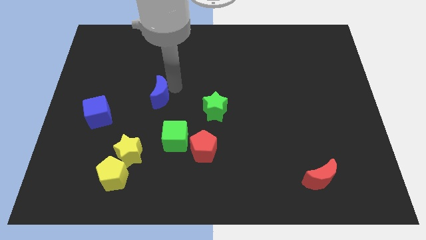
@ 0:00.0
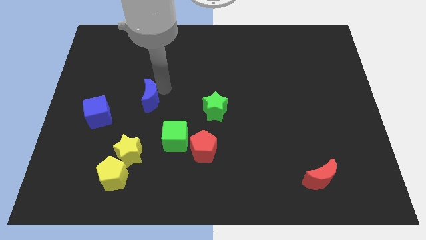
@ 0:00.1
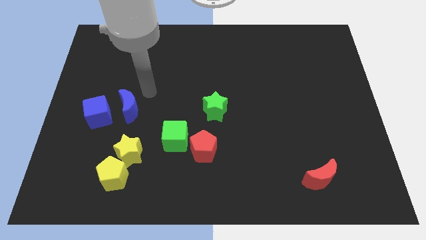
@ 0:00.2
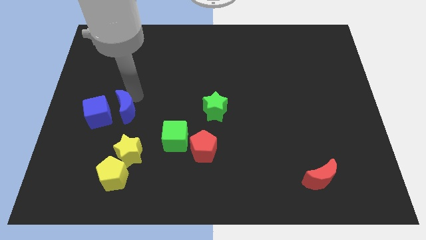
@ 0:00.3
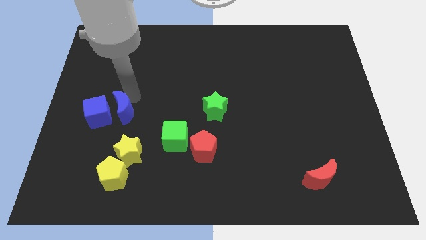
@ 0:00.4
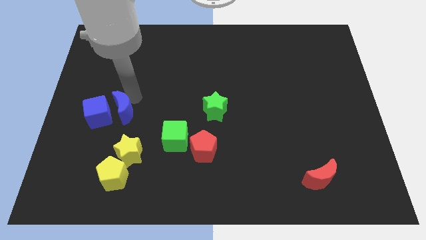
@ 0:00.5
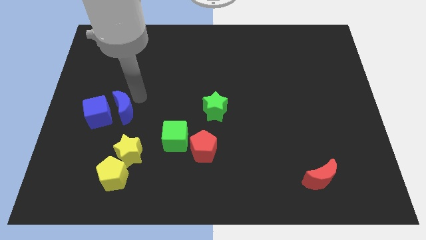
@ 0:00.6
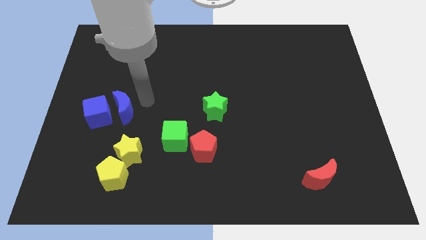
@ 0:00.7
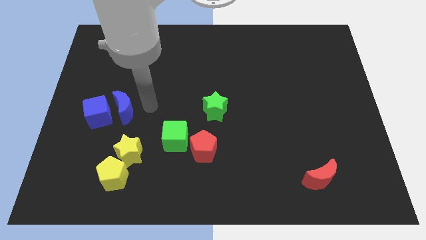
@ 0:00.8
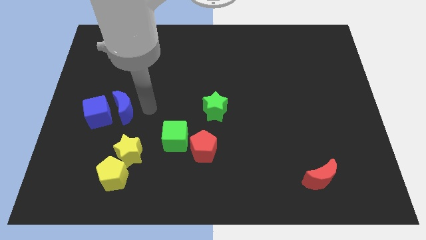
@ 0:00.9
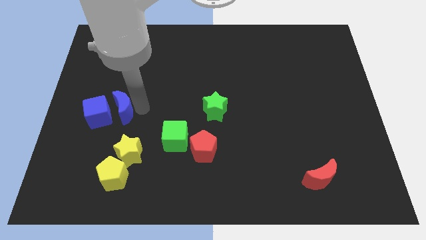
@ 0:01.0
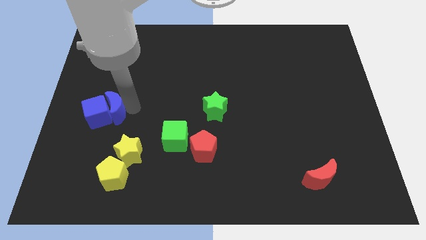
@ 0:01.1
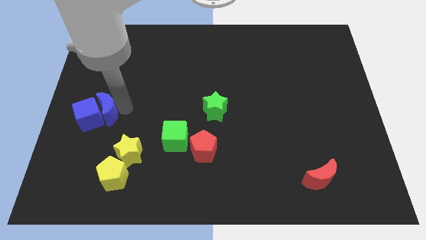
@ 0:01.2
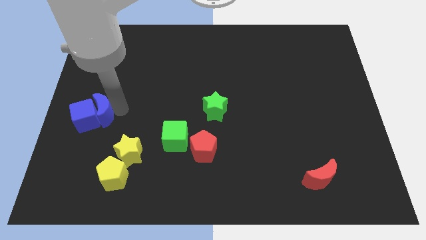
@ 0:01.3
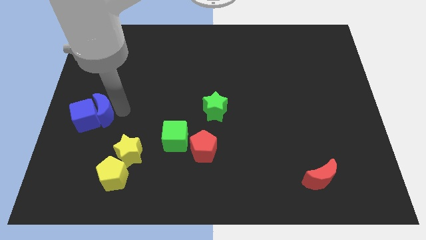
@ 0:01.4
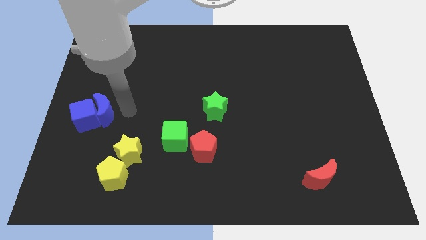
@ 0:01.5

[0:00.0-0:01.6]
move the blue crescent into the blue cube

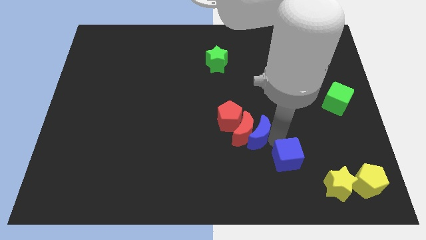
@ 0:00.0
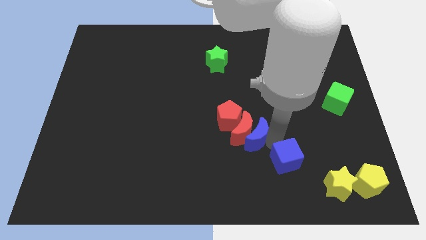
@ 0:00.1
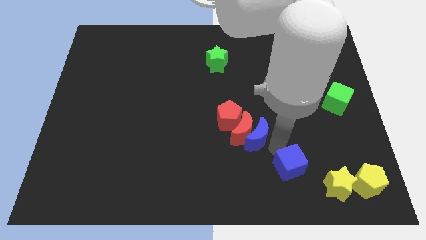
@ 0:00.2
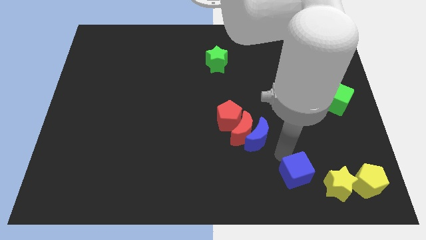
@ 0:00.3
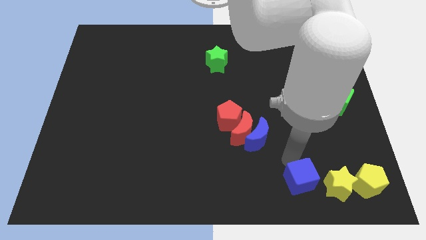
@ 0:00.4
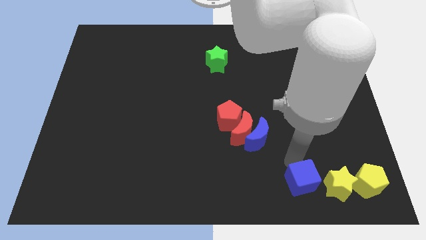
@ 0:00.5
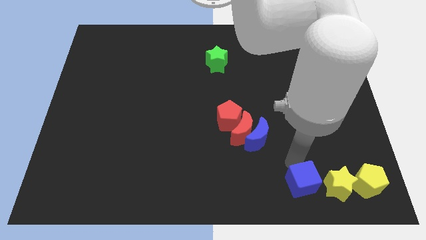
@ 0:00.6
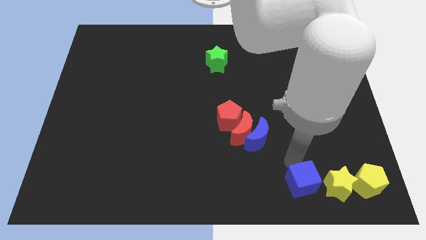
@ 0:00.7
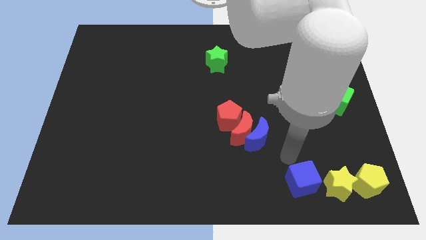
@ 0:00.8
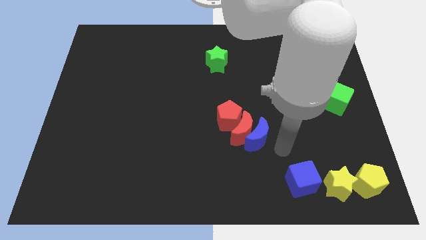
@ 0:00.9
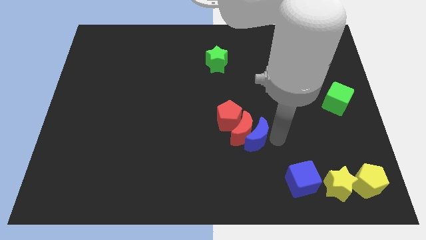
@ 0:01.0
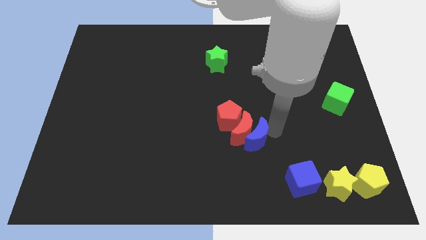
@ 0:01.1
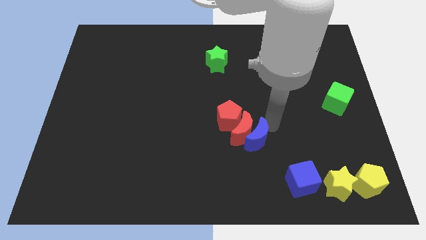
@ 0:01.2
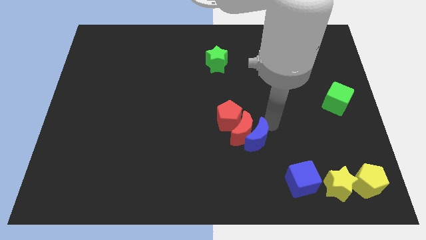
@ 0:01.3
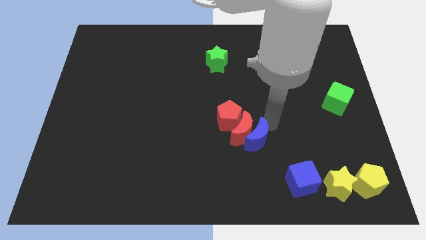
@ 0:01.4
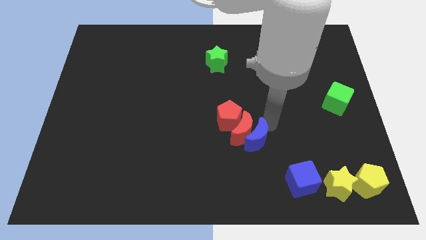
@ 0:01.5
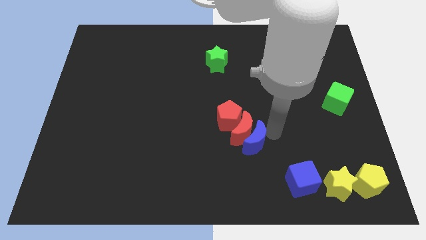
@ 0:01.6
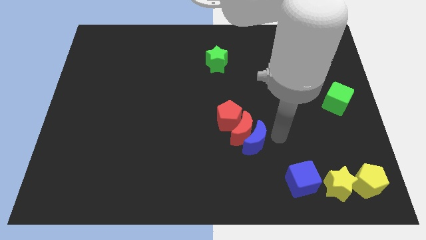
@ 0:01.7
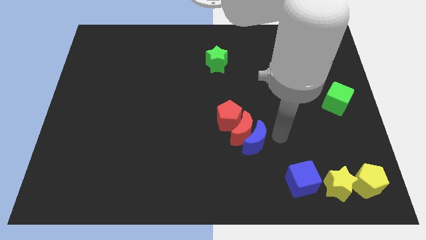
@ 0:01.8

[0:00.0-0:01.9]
separate the blue cube and blue moon

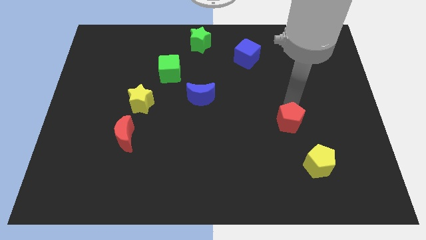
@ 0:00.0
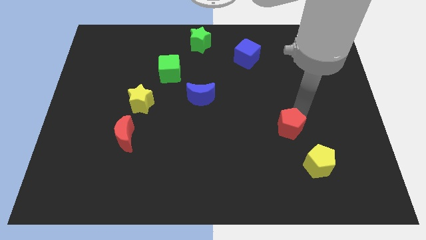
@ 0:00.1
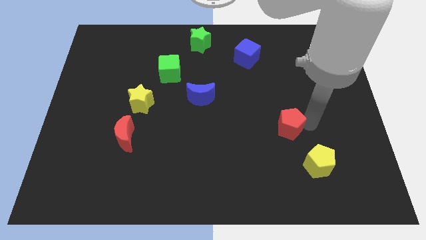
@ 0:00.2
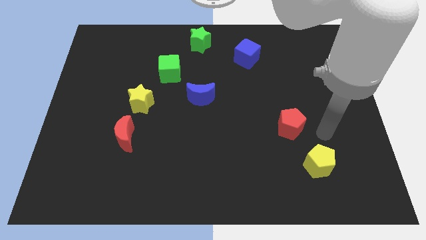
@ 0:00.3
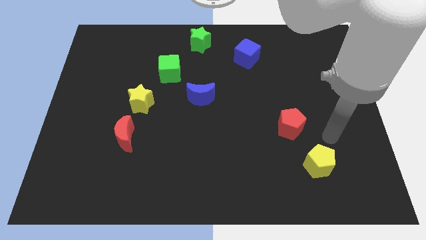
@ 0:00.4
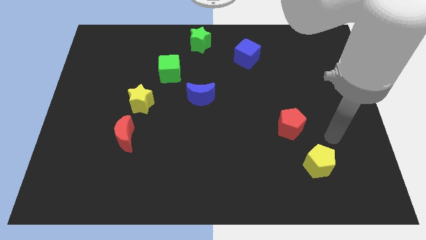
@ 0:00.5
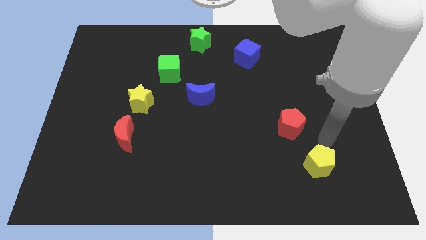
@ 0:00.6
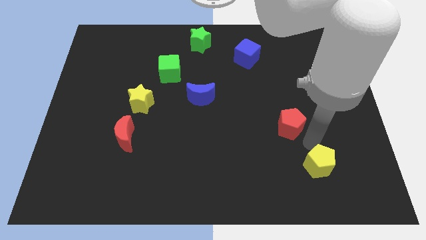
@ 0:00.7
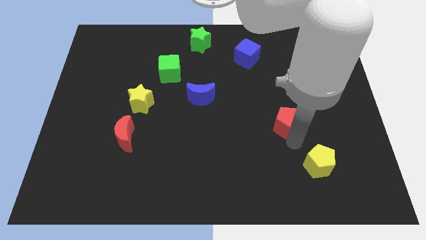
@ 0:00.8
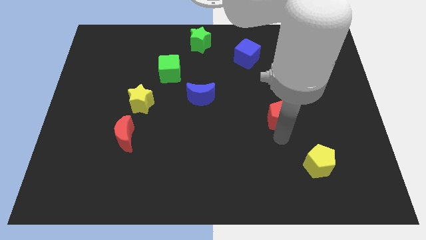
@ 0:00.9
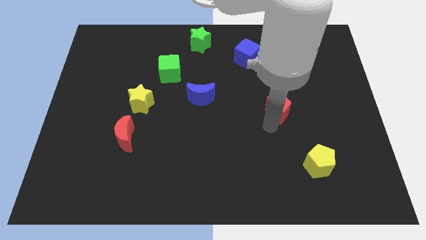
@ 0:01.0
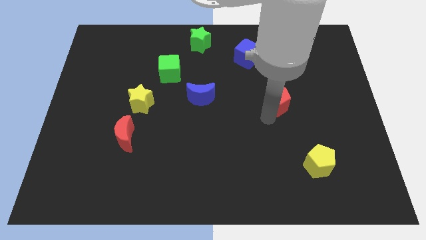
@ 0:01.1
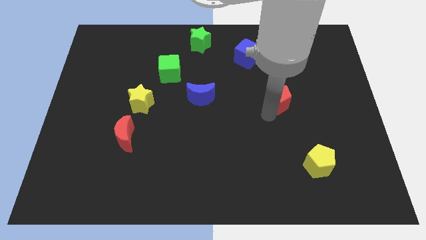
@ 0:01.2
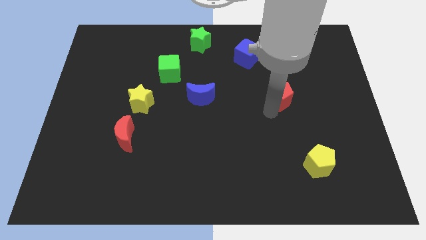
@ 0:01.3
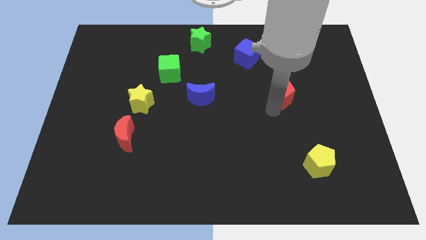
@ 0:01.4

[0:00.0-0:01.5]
push red pentagon to the center of the board

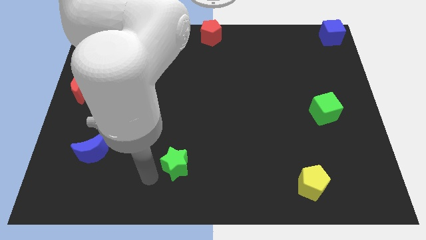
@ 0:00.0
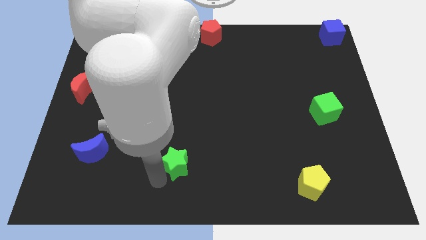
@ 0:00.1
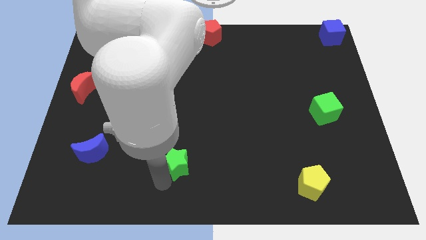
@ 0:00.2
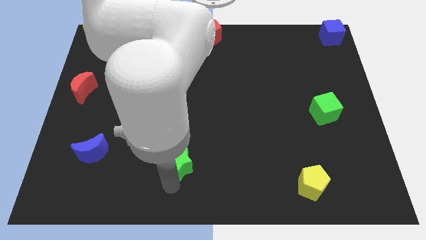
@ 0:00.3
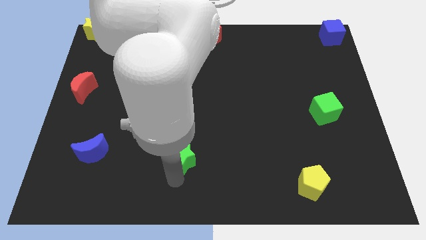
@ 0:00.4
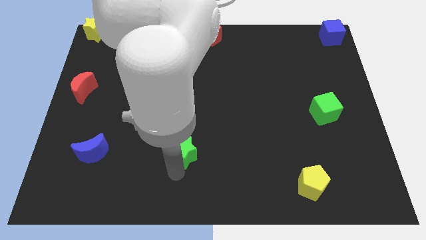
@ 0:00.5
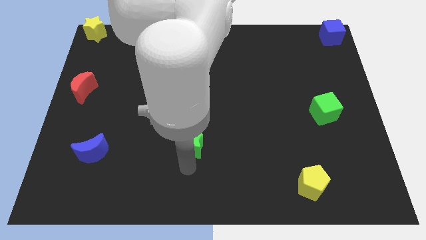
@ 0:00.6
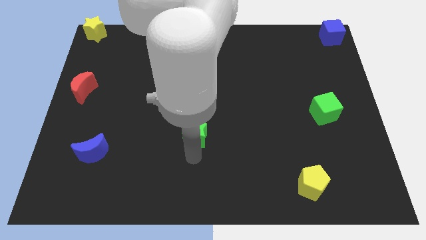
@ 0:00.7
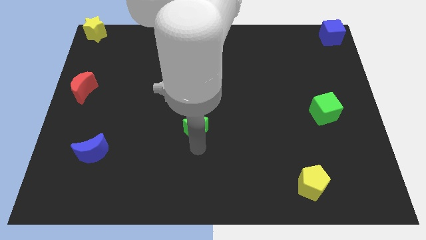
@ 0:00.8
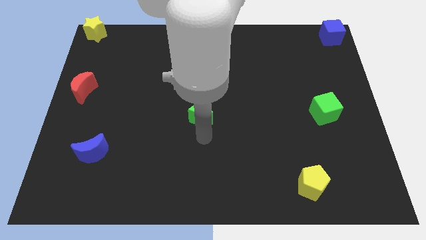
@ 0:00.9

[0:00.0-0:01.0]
push the green star to the center of the board

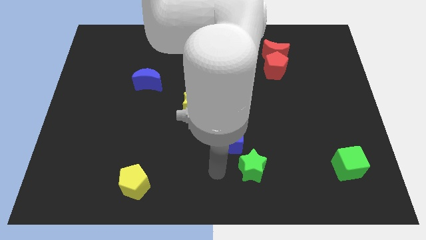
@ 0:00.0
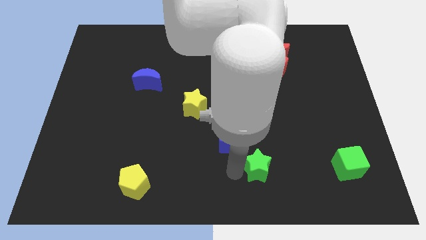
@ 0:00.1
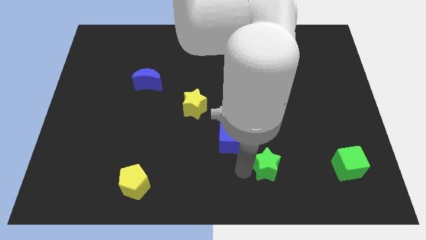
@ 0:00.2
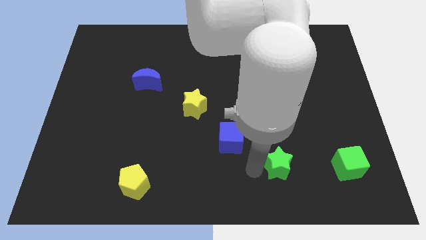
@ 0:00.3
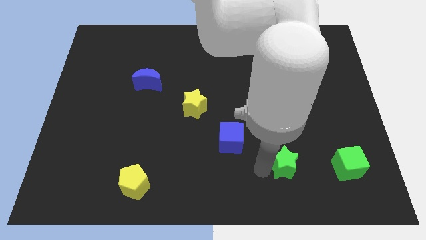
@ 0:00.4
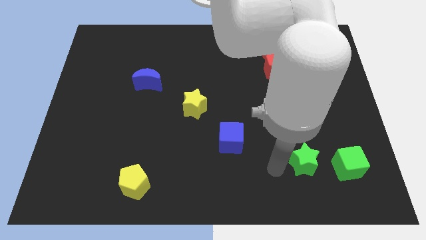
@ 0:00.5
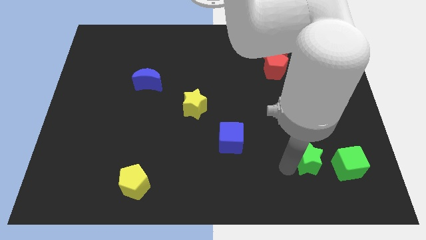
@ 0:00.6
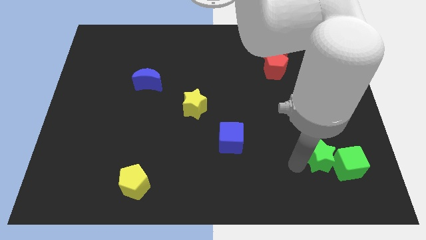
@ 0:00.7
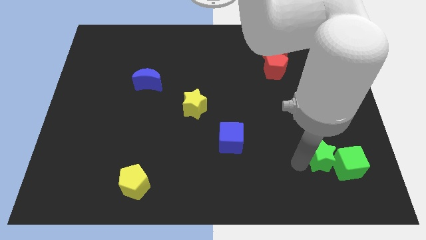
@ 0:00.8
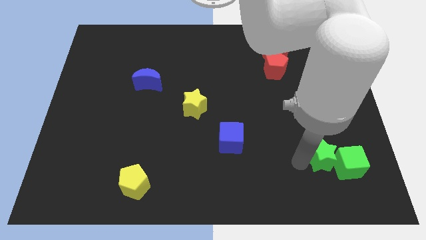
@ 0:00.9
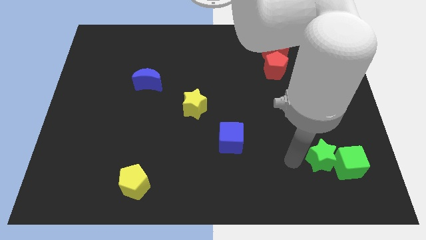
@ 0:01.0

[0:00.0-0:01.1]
put green blocks together

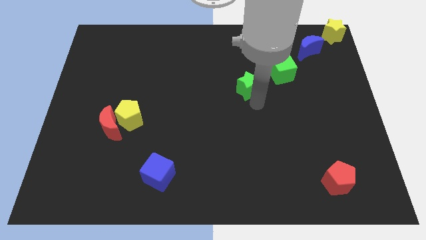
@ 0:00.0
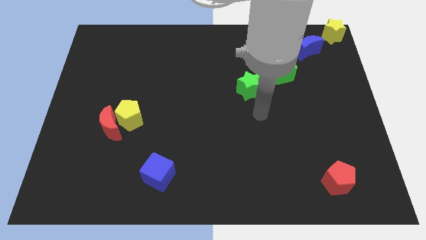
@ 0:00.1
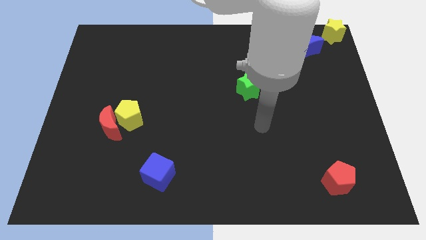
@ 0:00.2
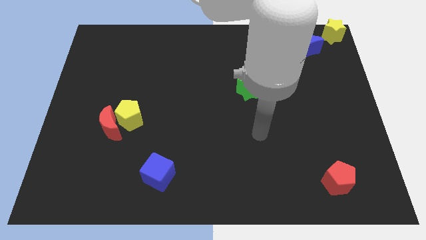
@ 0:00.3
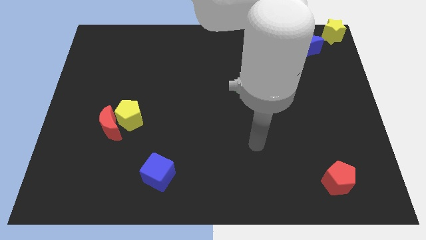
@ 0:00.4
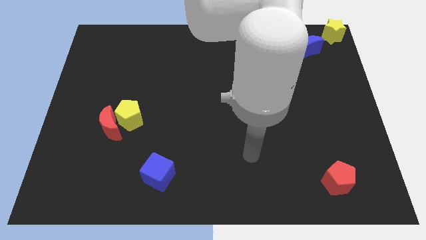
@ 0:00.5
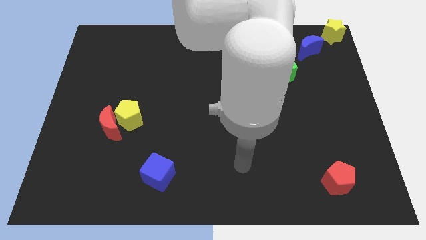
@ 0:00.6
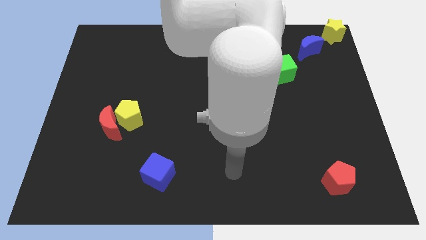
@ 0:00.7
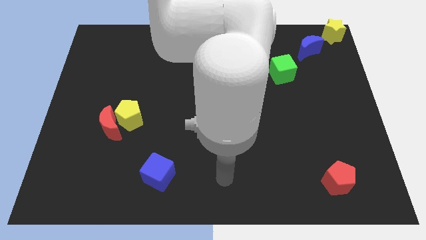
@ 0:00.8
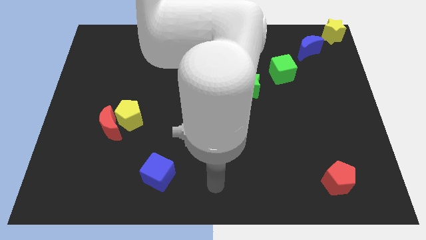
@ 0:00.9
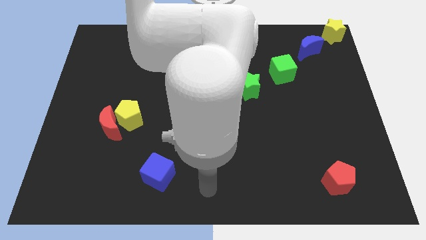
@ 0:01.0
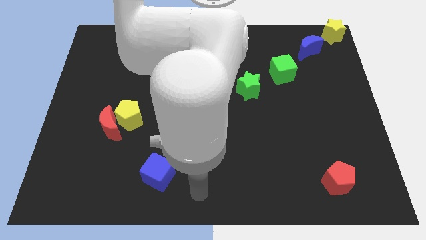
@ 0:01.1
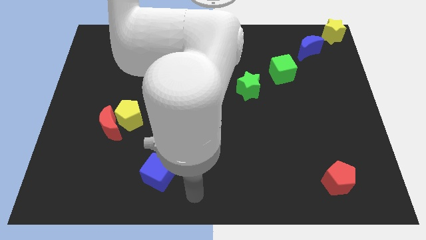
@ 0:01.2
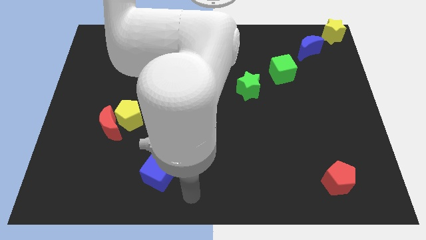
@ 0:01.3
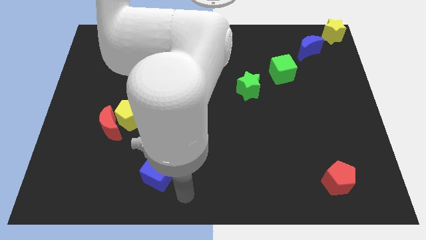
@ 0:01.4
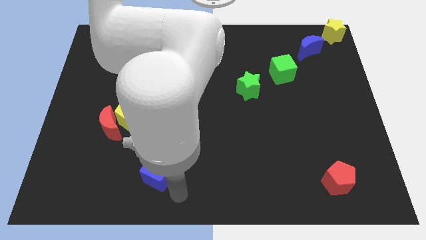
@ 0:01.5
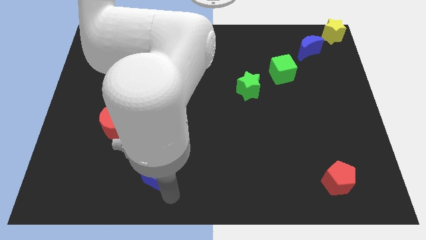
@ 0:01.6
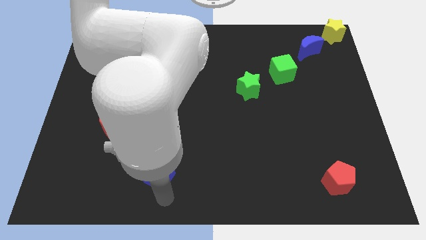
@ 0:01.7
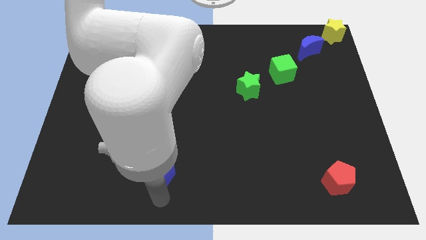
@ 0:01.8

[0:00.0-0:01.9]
move your hand towards the bottom of the blue cube
